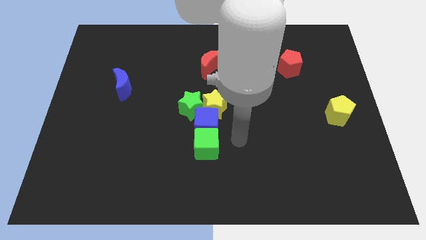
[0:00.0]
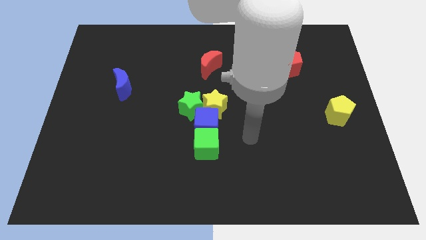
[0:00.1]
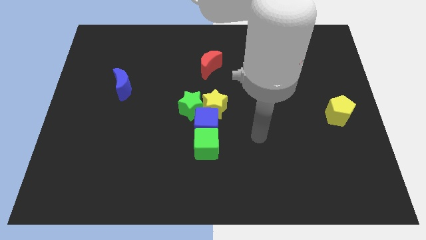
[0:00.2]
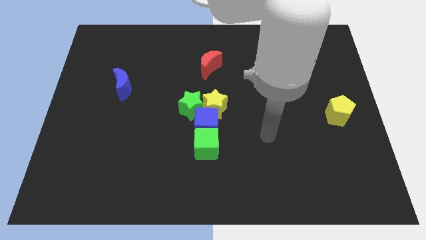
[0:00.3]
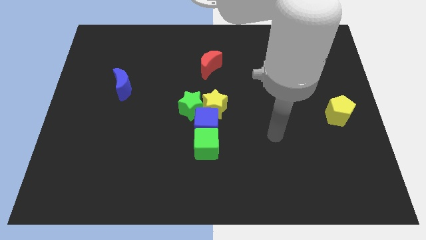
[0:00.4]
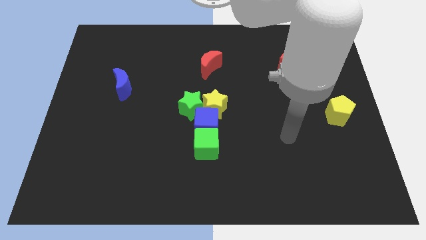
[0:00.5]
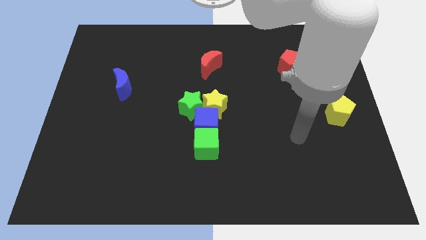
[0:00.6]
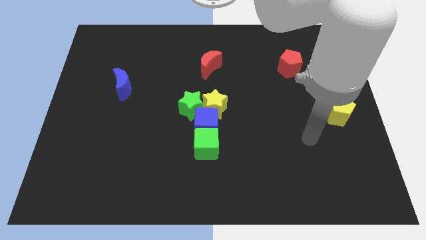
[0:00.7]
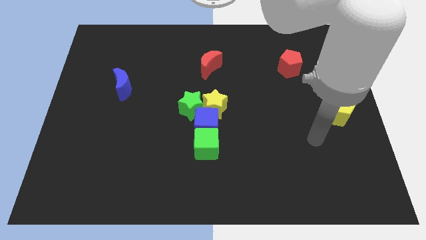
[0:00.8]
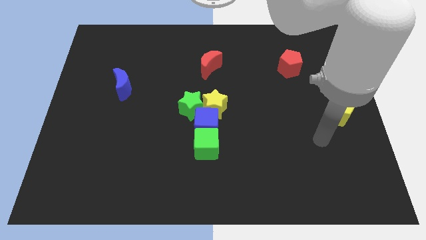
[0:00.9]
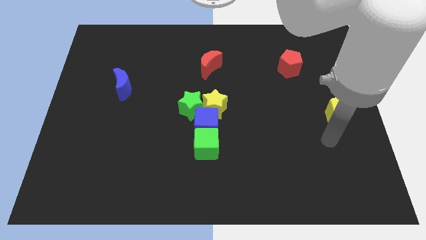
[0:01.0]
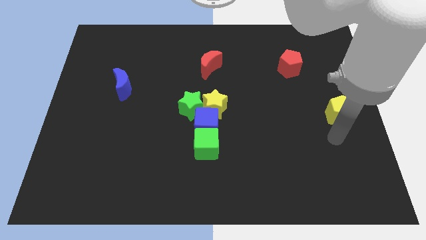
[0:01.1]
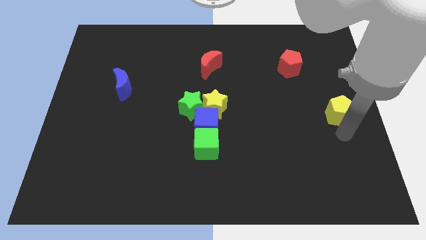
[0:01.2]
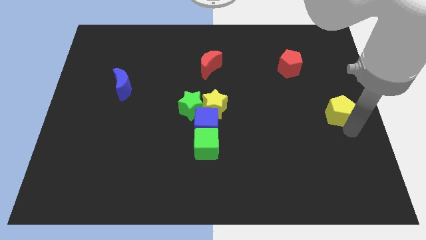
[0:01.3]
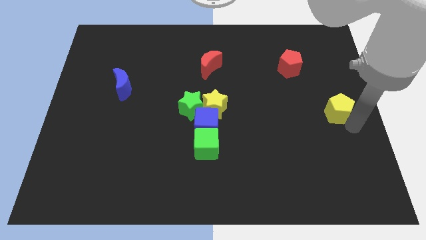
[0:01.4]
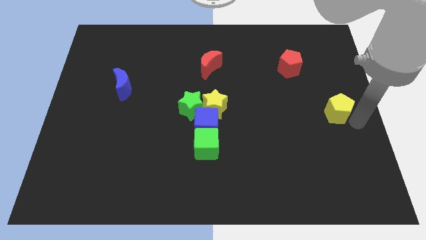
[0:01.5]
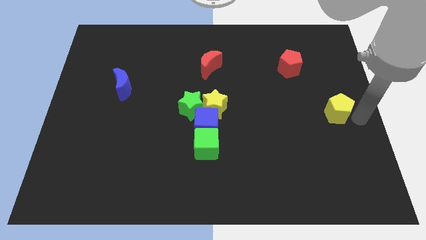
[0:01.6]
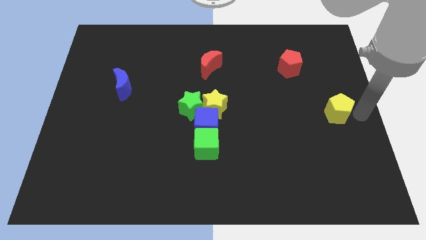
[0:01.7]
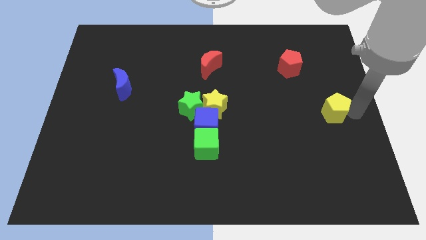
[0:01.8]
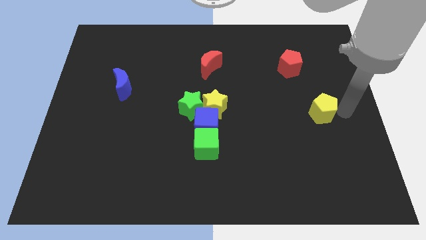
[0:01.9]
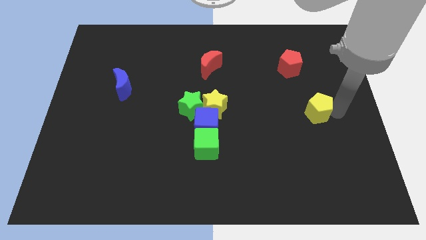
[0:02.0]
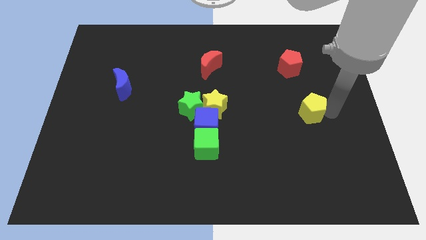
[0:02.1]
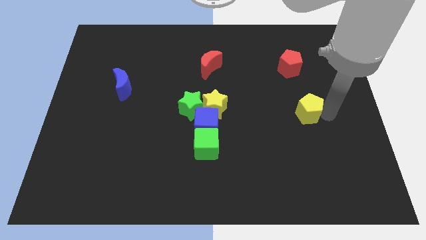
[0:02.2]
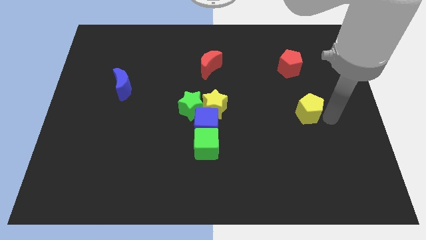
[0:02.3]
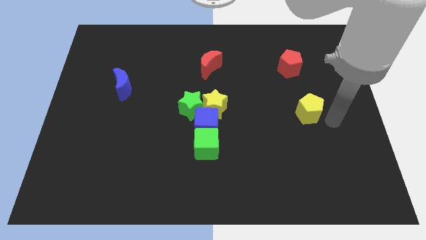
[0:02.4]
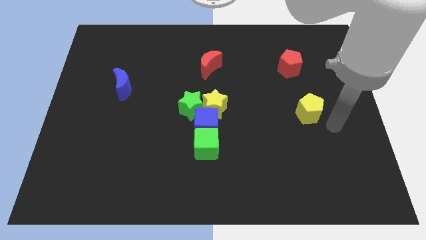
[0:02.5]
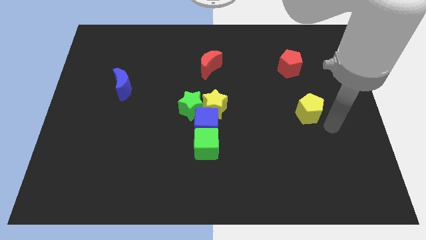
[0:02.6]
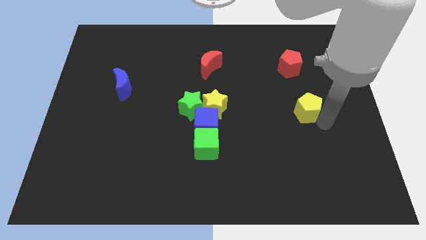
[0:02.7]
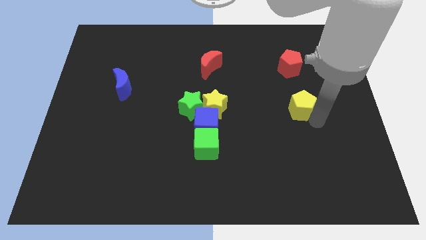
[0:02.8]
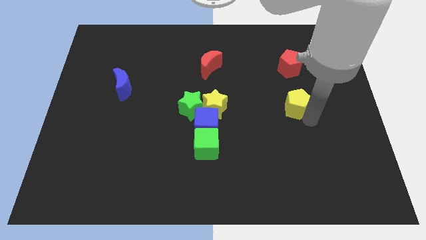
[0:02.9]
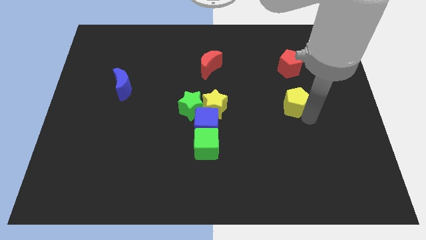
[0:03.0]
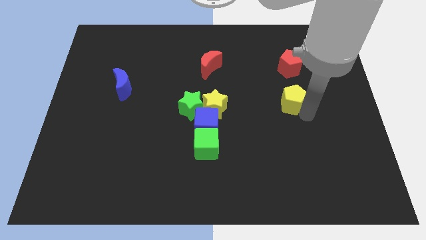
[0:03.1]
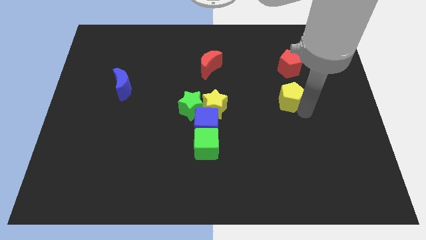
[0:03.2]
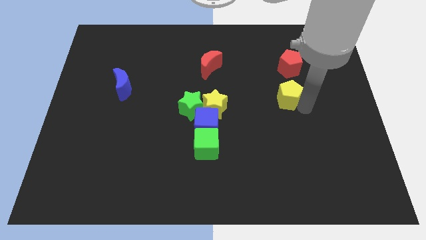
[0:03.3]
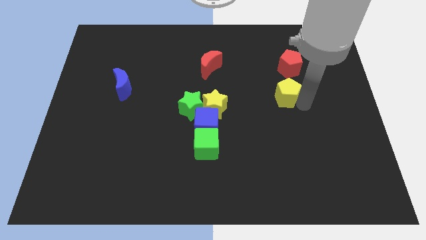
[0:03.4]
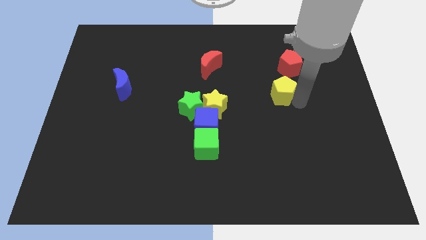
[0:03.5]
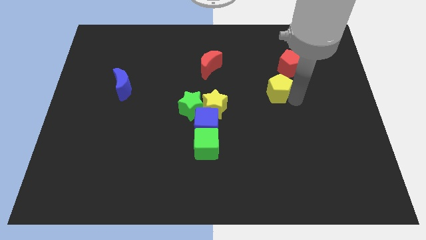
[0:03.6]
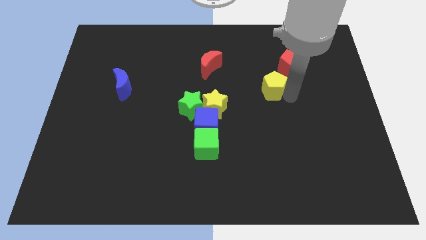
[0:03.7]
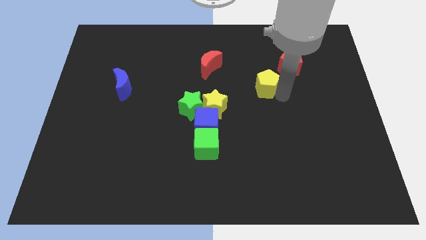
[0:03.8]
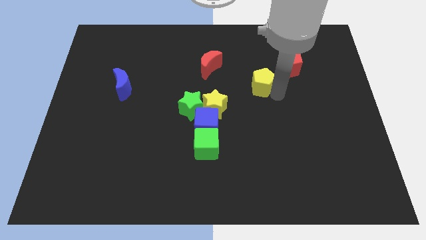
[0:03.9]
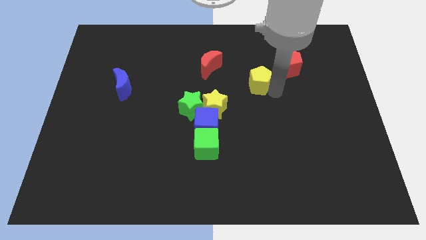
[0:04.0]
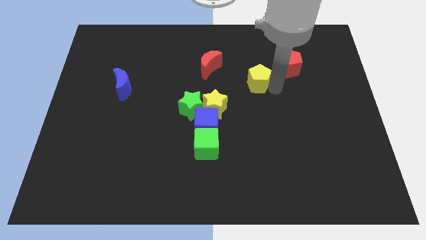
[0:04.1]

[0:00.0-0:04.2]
slide the yellow pentagon diagonally in between the red pentagon and yellow star

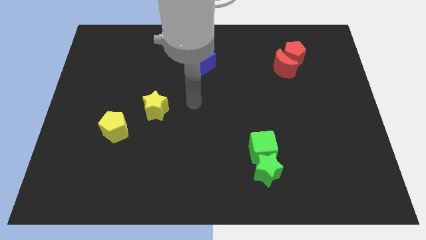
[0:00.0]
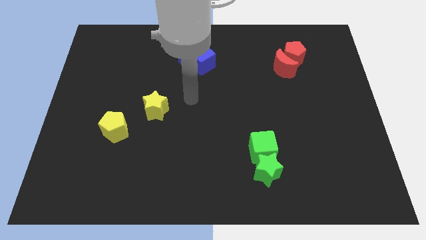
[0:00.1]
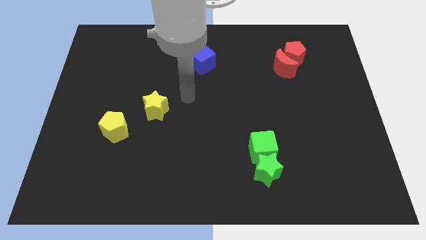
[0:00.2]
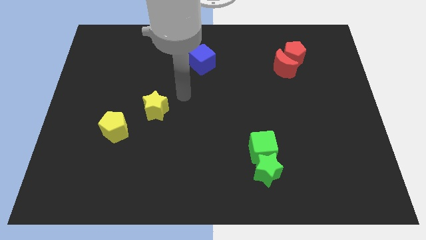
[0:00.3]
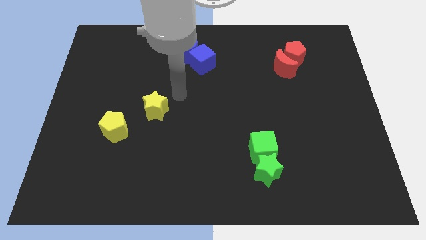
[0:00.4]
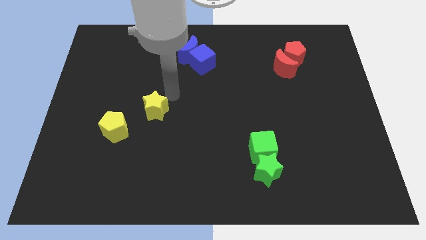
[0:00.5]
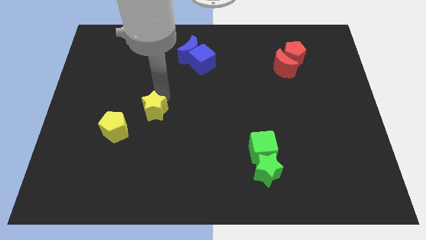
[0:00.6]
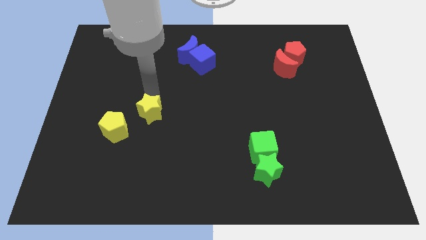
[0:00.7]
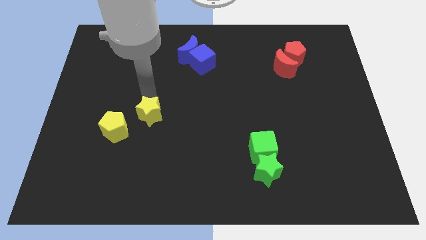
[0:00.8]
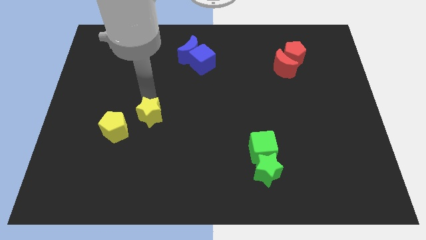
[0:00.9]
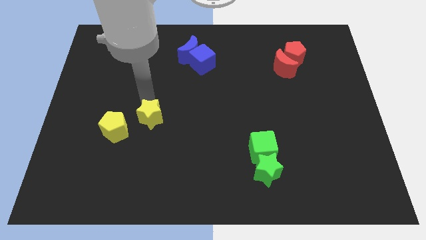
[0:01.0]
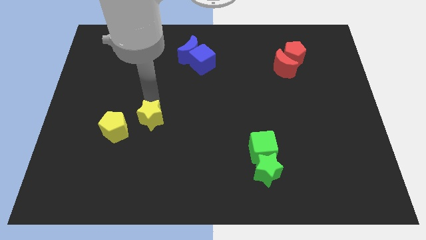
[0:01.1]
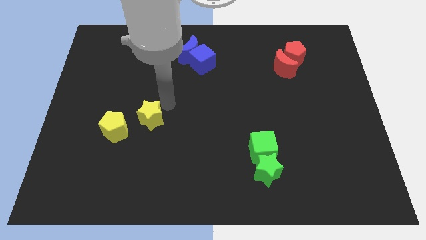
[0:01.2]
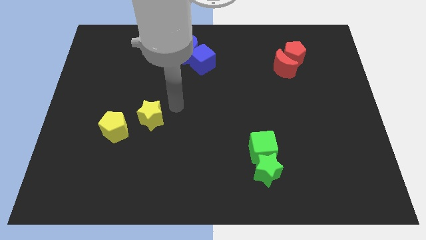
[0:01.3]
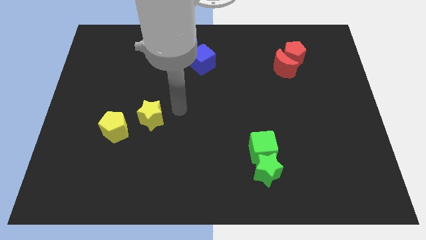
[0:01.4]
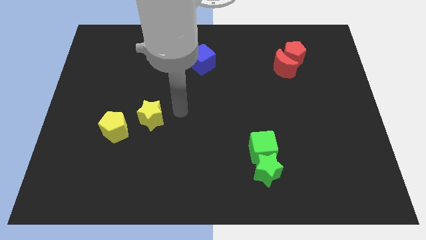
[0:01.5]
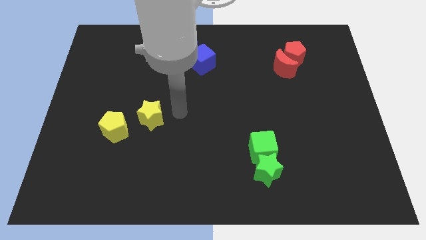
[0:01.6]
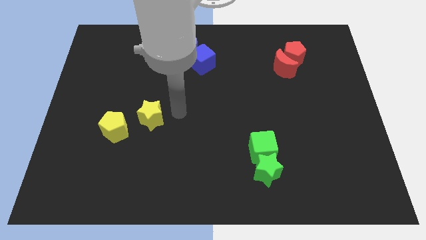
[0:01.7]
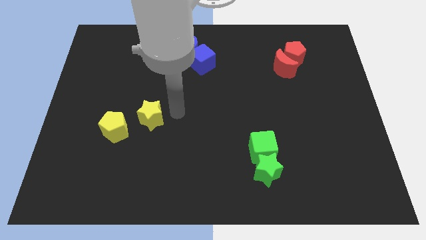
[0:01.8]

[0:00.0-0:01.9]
move yellow star downwards

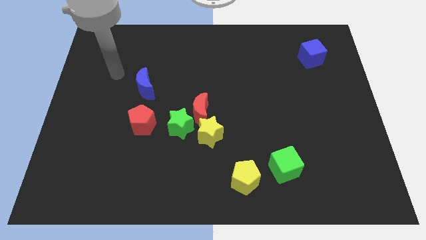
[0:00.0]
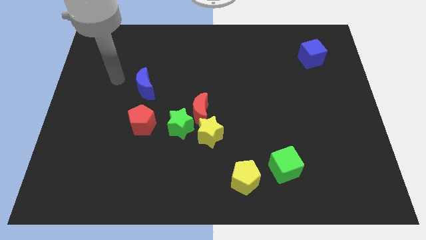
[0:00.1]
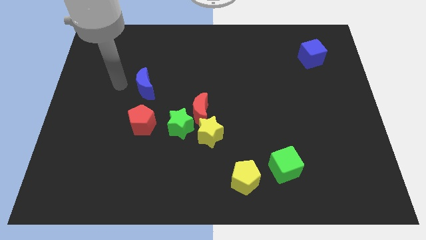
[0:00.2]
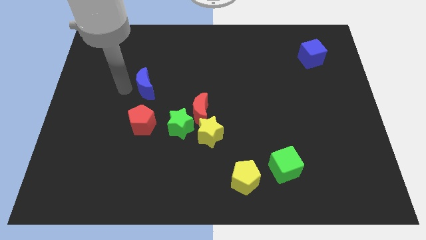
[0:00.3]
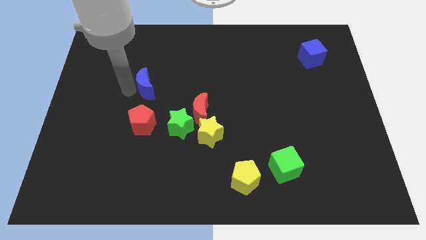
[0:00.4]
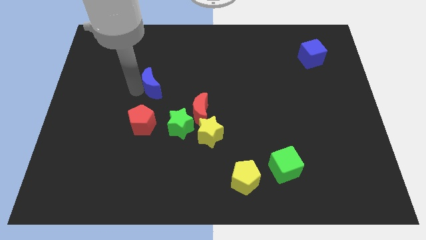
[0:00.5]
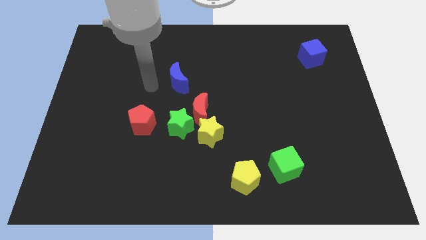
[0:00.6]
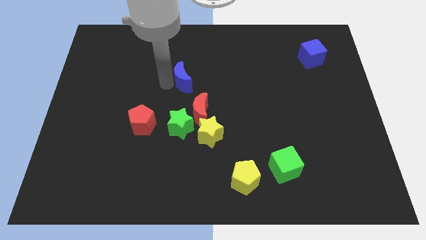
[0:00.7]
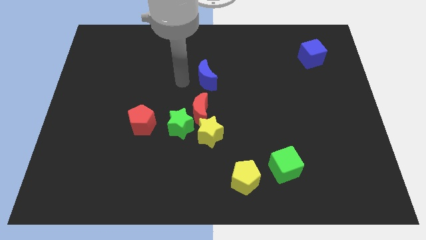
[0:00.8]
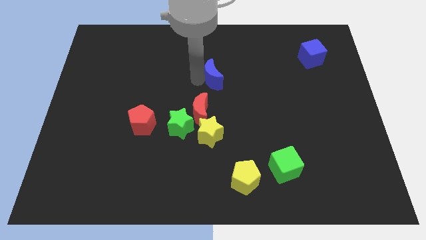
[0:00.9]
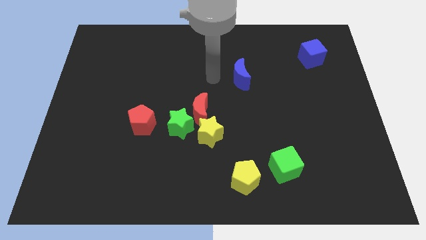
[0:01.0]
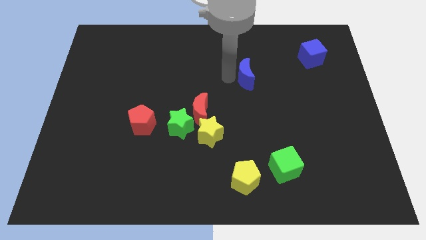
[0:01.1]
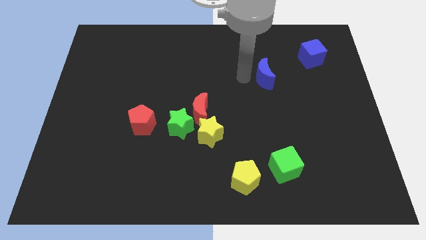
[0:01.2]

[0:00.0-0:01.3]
move the blue moon towards the blue cube

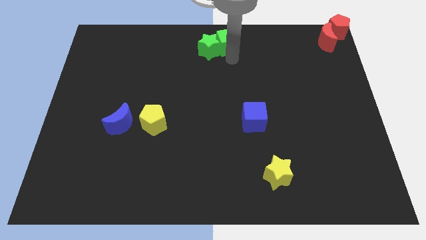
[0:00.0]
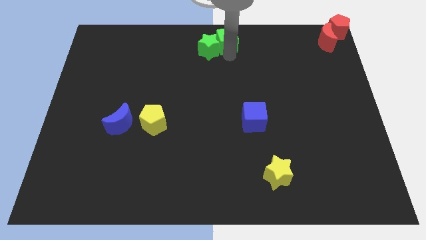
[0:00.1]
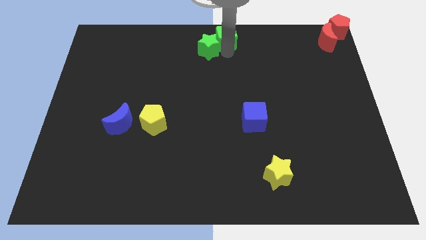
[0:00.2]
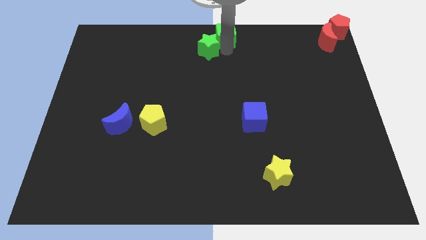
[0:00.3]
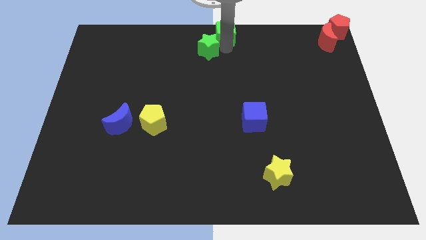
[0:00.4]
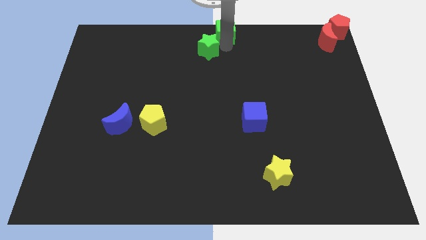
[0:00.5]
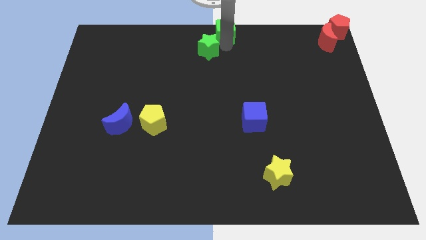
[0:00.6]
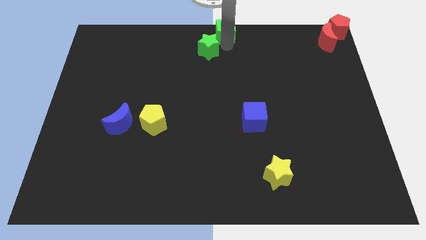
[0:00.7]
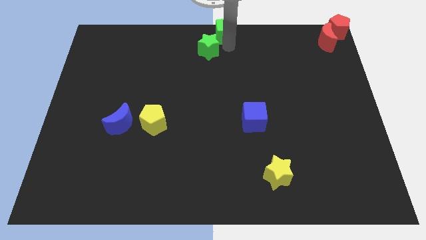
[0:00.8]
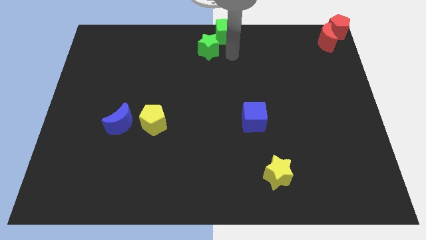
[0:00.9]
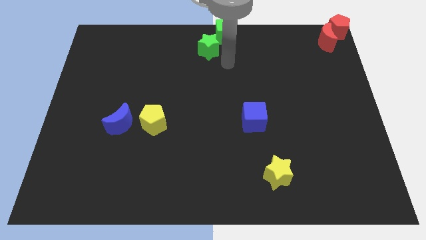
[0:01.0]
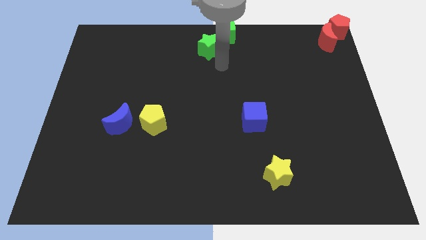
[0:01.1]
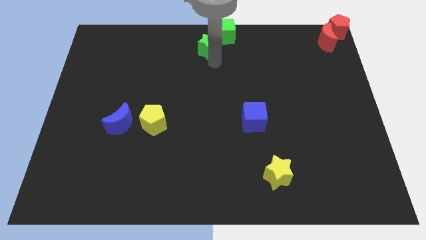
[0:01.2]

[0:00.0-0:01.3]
push the green cube to the top center

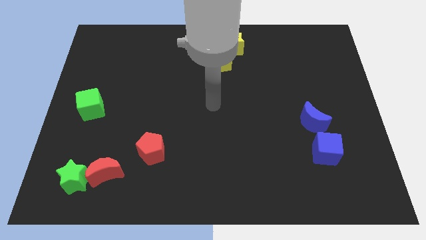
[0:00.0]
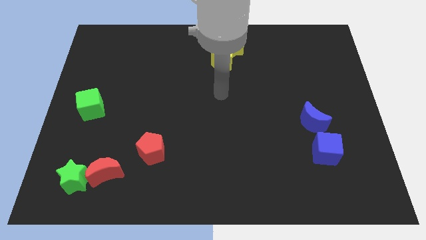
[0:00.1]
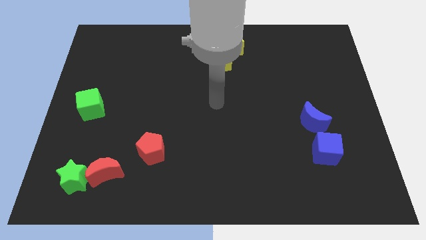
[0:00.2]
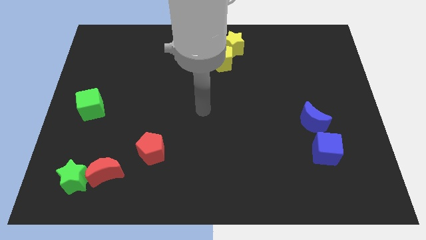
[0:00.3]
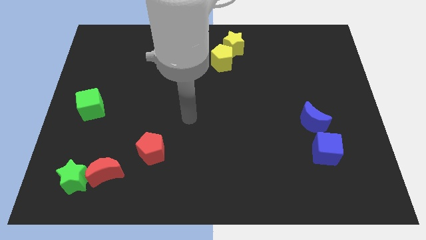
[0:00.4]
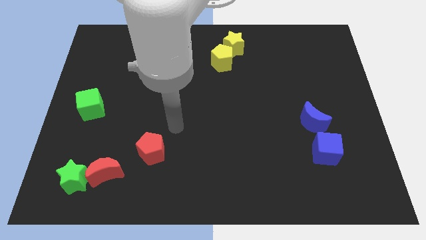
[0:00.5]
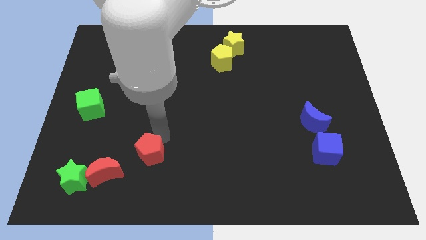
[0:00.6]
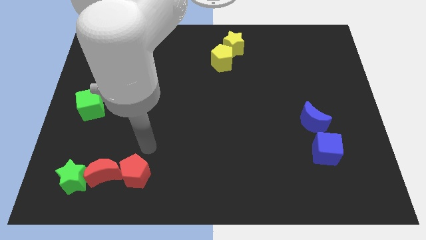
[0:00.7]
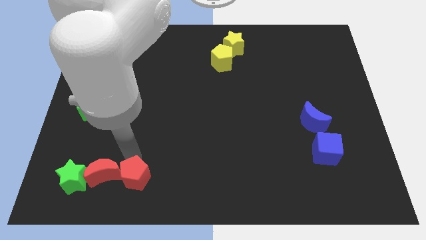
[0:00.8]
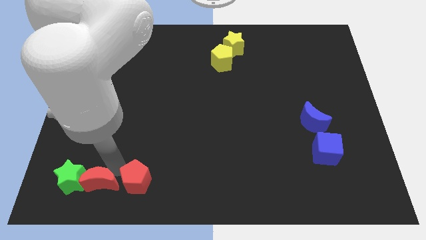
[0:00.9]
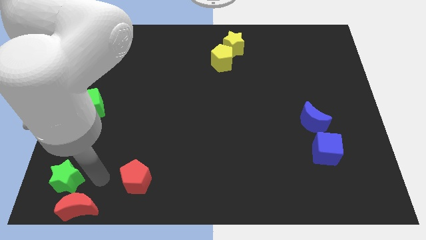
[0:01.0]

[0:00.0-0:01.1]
move the red pentagon to the right of red crescent
